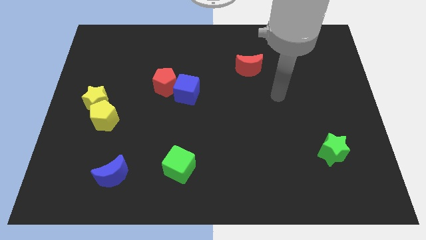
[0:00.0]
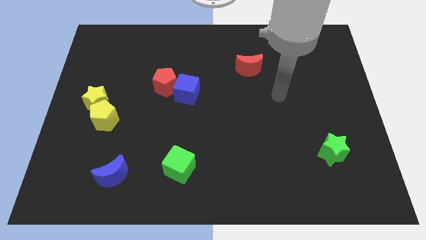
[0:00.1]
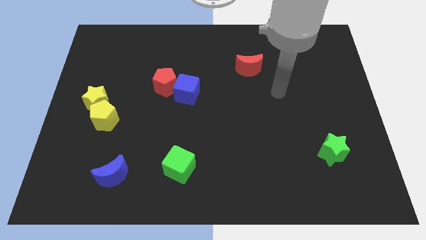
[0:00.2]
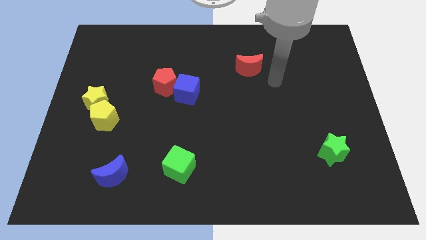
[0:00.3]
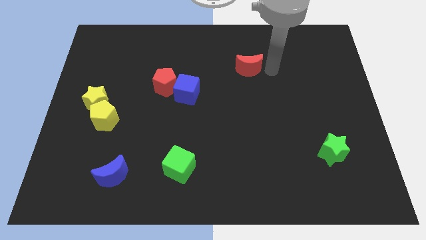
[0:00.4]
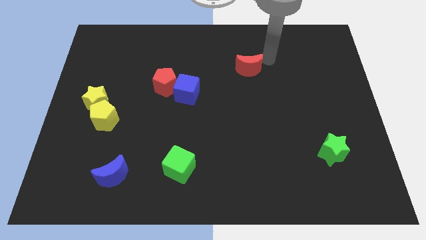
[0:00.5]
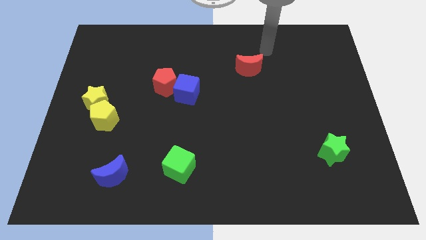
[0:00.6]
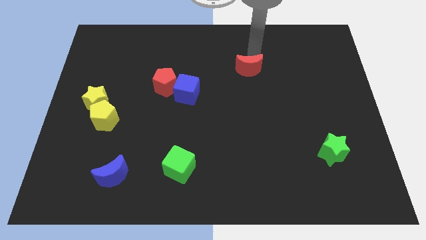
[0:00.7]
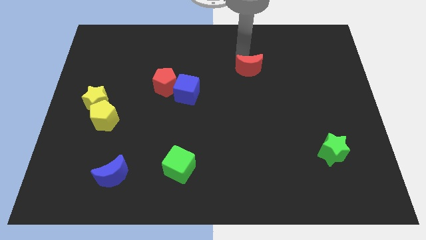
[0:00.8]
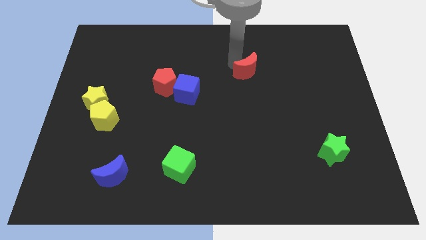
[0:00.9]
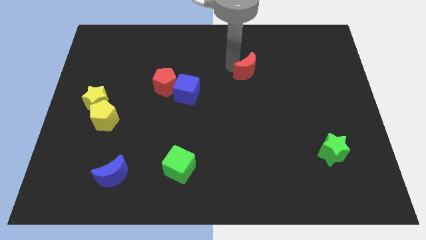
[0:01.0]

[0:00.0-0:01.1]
move your arm above the red moon

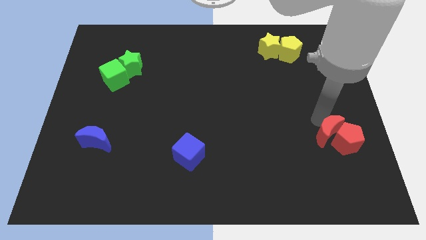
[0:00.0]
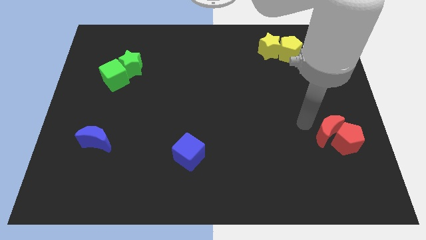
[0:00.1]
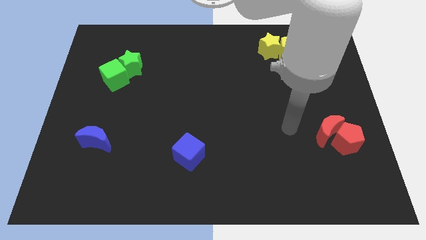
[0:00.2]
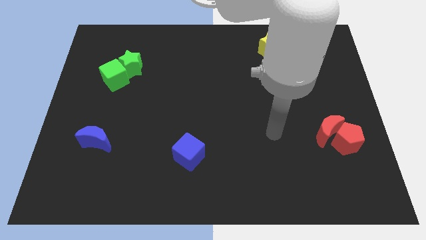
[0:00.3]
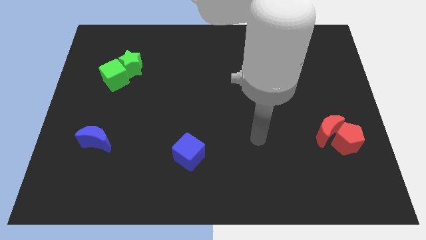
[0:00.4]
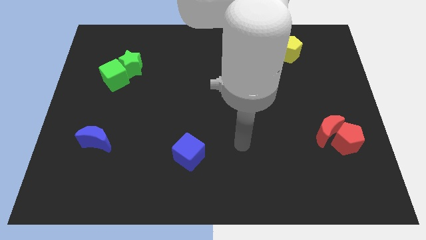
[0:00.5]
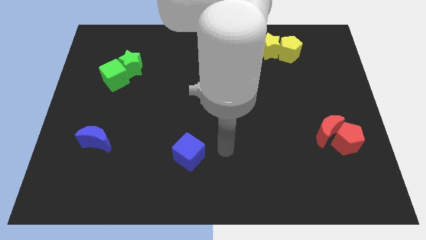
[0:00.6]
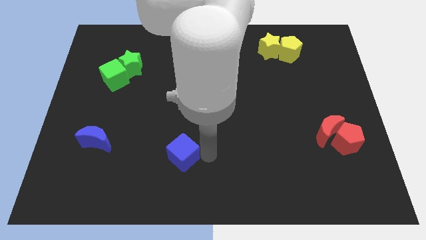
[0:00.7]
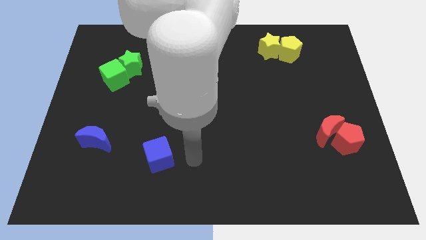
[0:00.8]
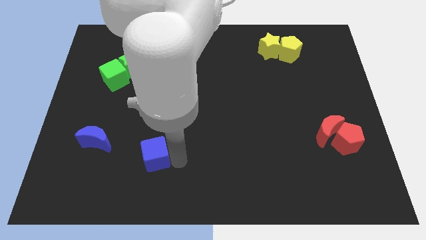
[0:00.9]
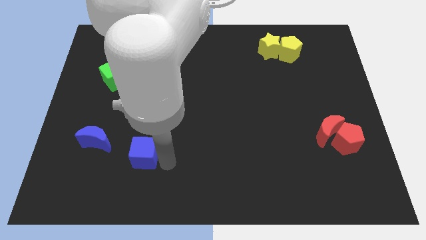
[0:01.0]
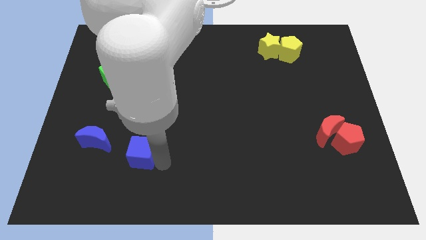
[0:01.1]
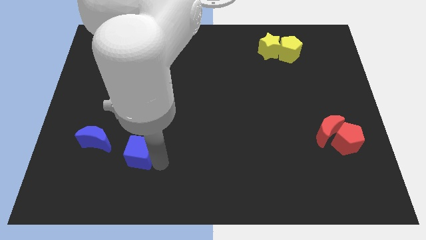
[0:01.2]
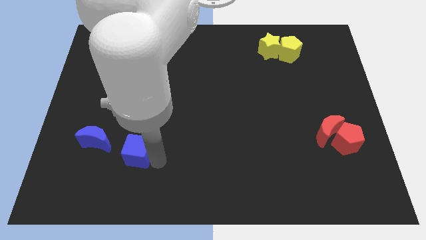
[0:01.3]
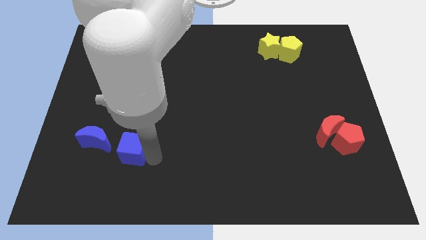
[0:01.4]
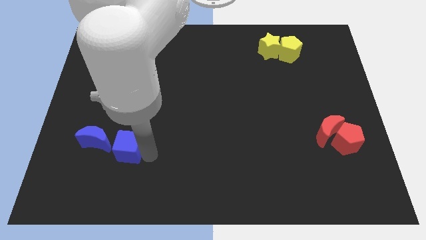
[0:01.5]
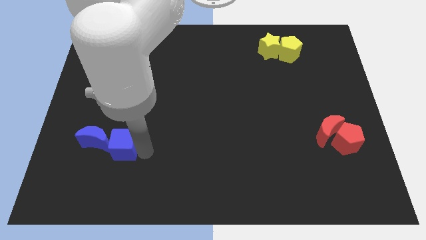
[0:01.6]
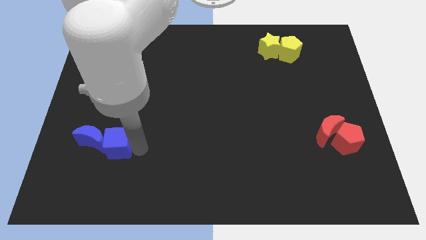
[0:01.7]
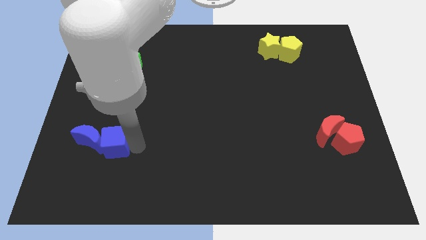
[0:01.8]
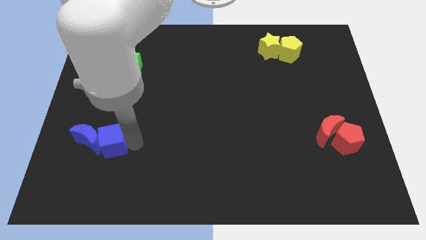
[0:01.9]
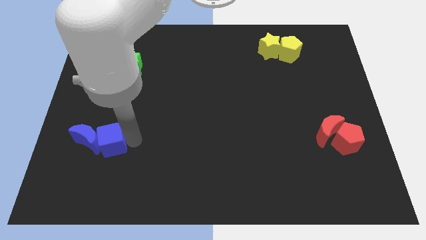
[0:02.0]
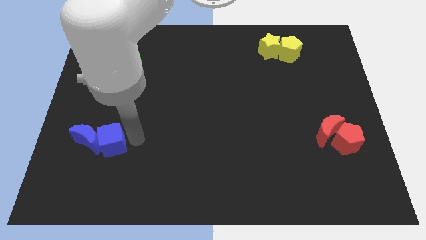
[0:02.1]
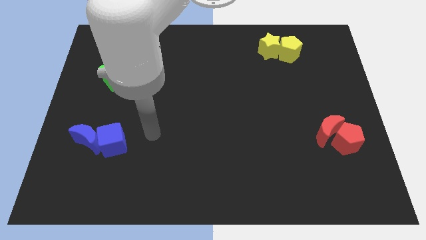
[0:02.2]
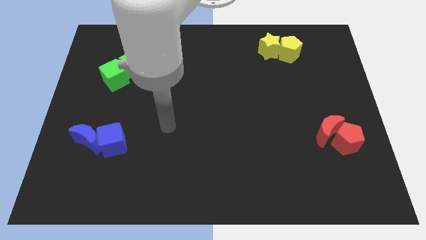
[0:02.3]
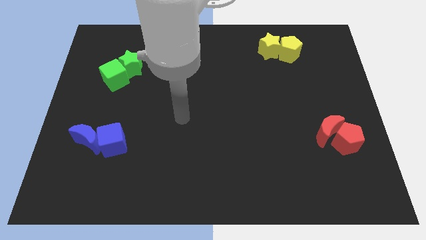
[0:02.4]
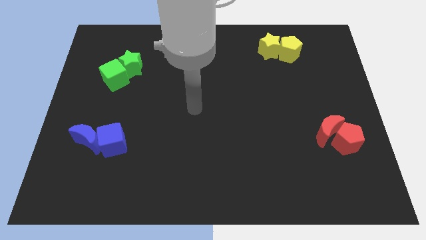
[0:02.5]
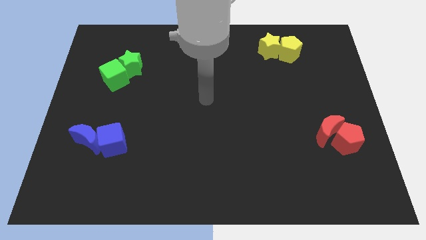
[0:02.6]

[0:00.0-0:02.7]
slide the blue cube into the right side of the blue moon

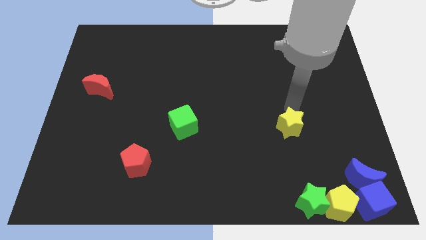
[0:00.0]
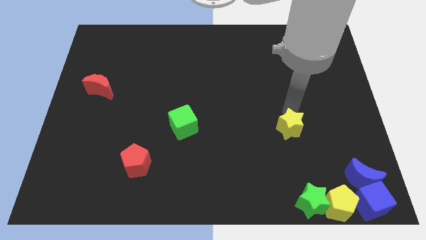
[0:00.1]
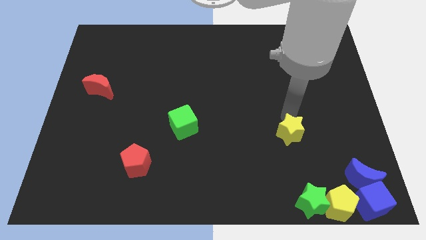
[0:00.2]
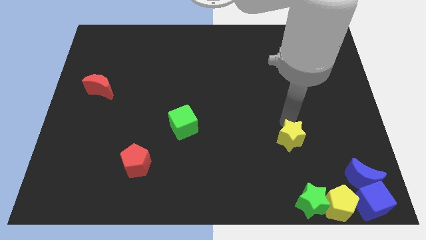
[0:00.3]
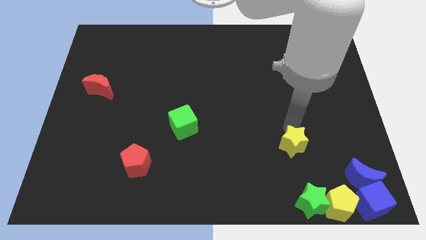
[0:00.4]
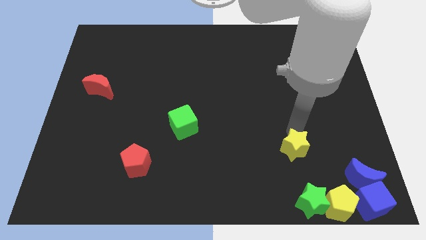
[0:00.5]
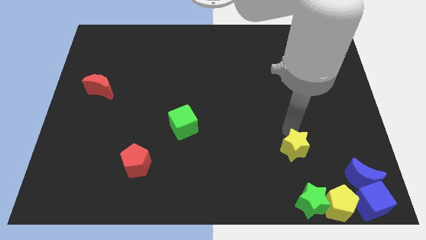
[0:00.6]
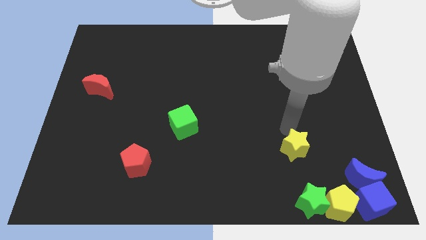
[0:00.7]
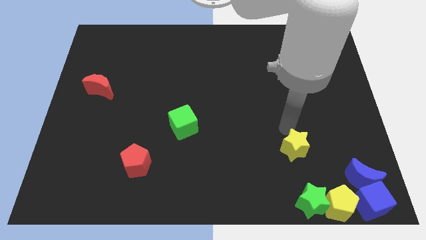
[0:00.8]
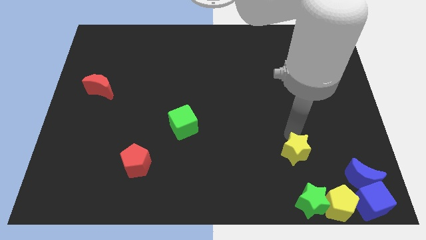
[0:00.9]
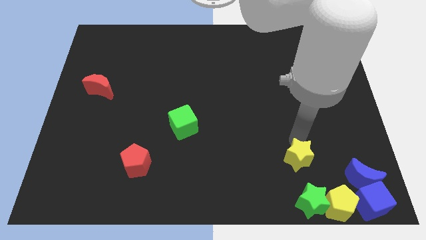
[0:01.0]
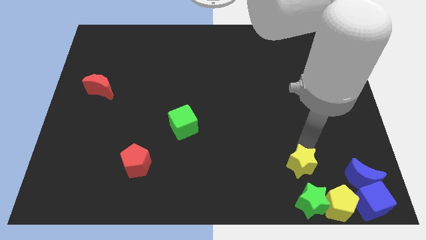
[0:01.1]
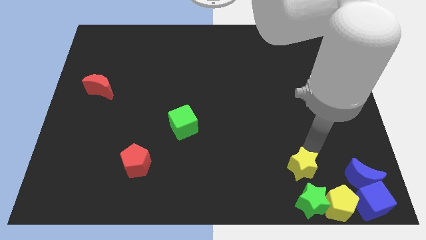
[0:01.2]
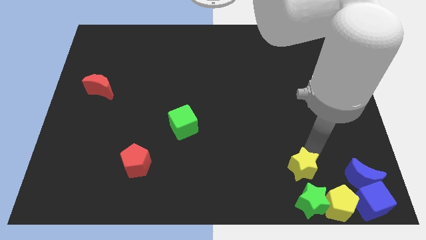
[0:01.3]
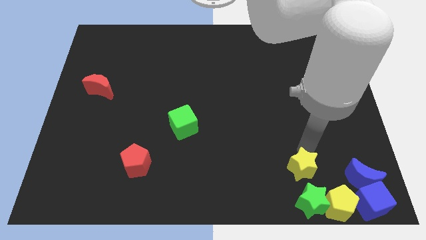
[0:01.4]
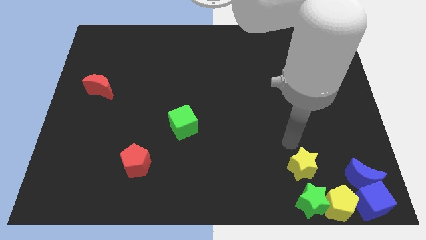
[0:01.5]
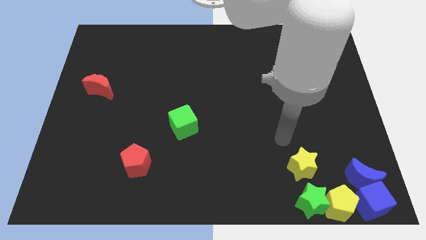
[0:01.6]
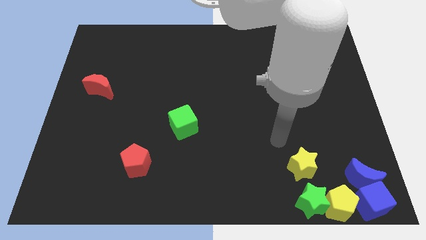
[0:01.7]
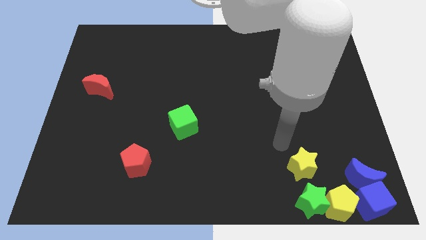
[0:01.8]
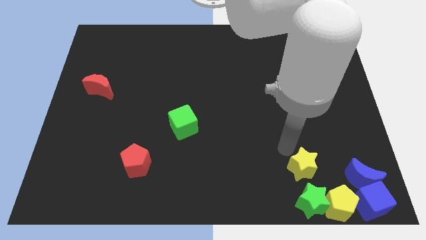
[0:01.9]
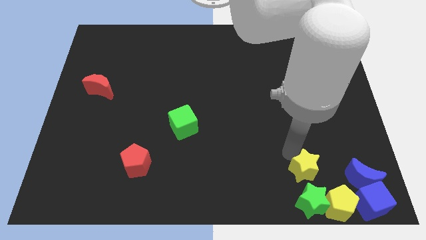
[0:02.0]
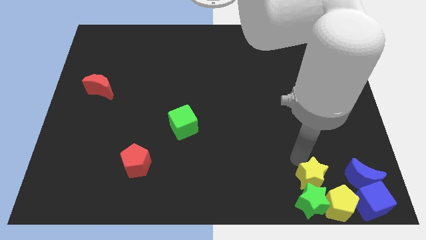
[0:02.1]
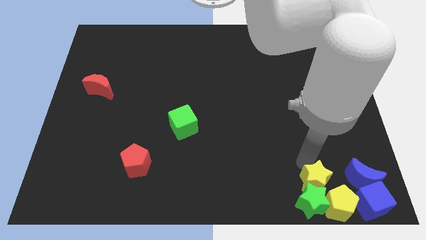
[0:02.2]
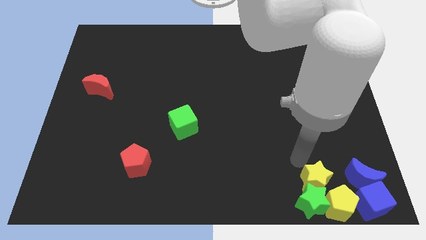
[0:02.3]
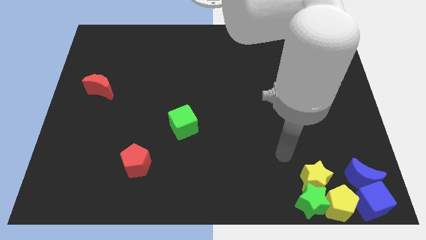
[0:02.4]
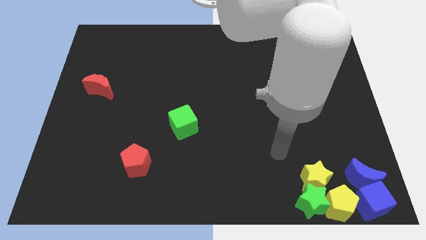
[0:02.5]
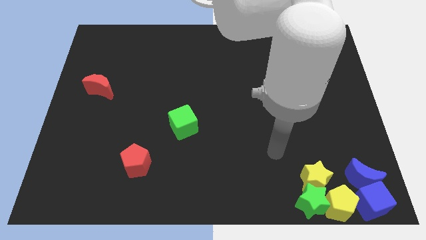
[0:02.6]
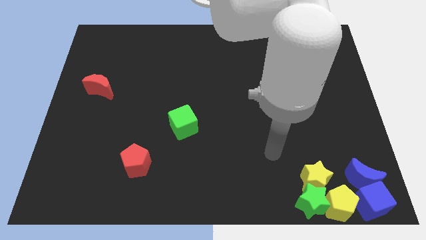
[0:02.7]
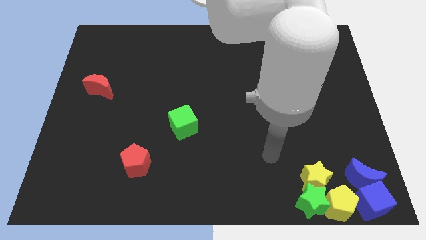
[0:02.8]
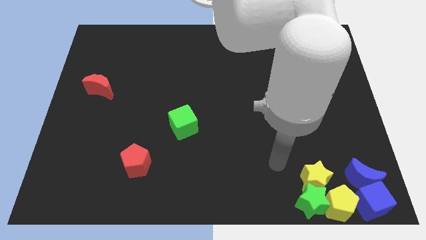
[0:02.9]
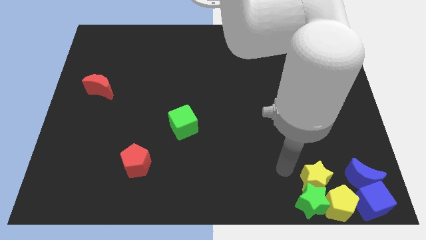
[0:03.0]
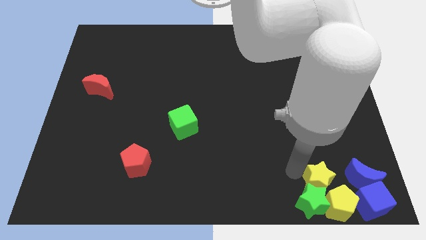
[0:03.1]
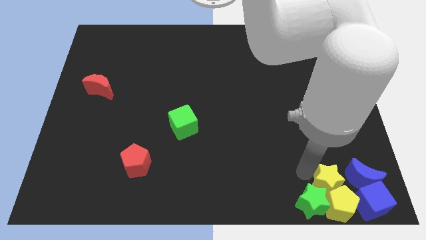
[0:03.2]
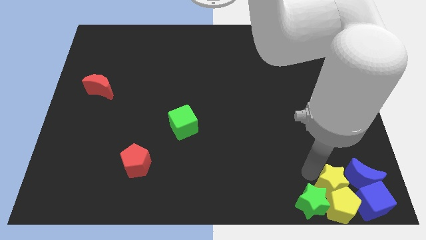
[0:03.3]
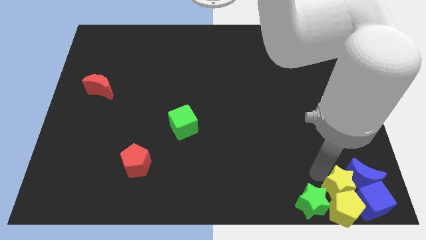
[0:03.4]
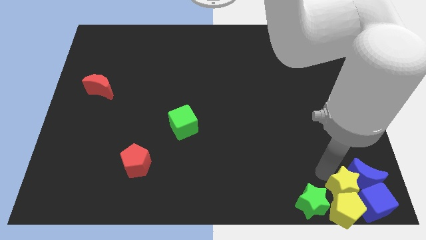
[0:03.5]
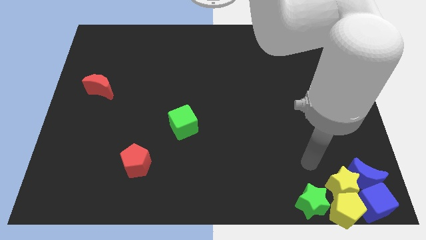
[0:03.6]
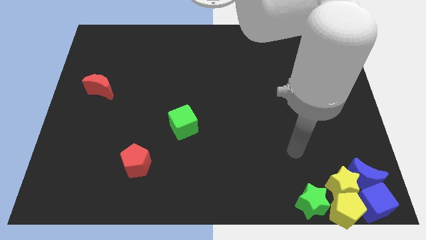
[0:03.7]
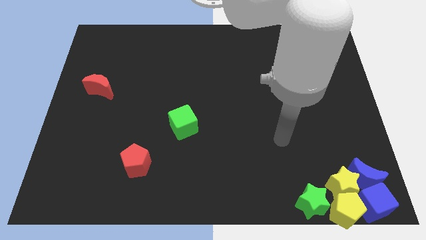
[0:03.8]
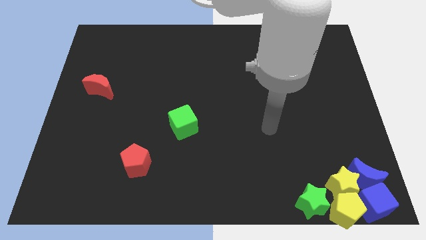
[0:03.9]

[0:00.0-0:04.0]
move the yellow star into the yellow pentagon

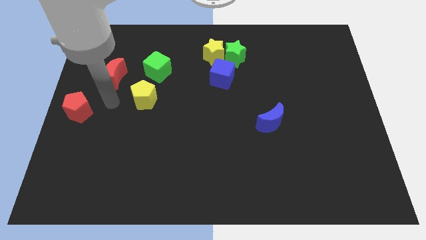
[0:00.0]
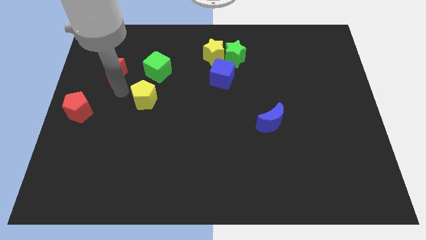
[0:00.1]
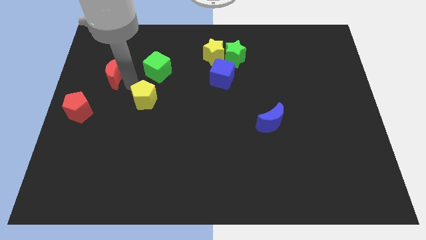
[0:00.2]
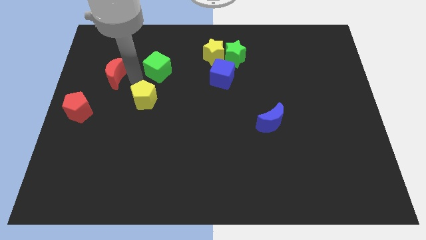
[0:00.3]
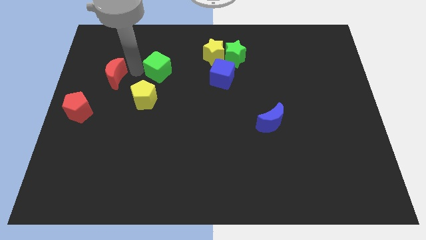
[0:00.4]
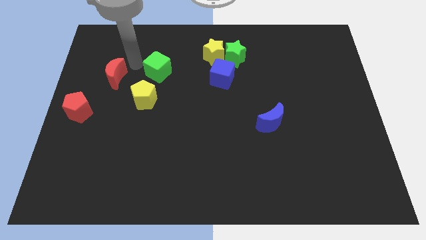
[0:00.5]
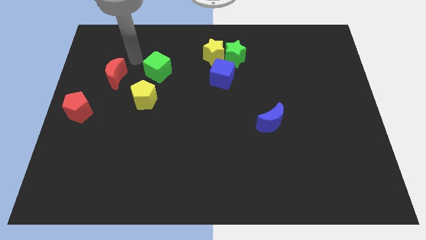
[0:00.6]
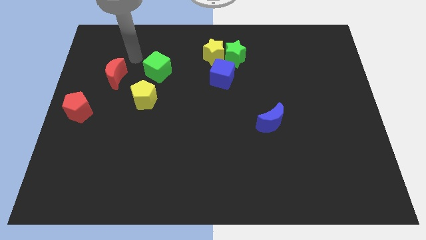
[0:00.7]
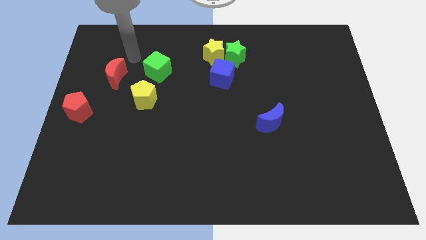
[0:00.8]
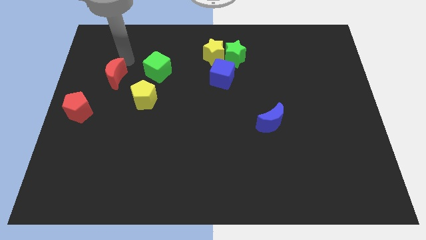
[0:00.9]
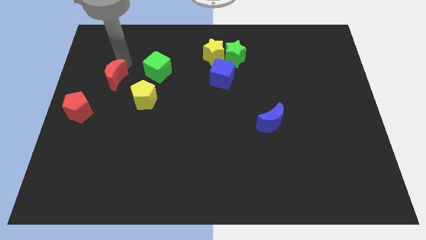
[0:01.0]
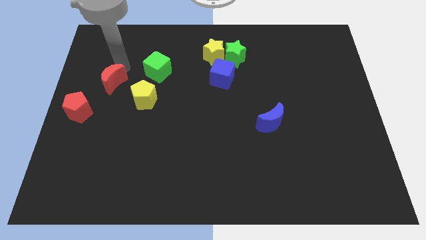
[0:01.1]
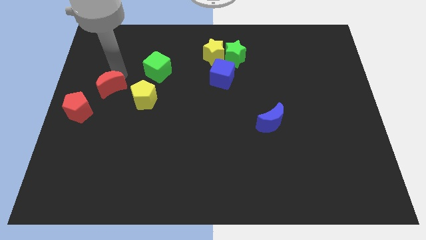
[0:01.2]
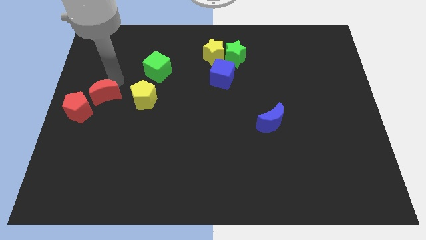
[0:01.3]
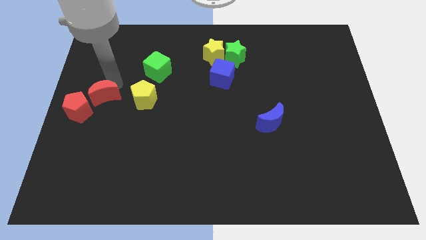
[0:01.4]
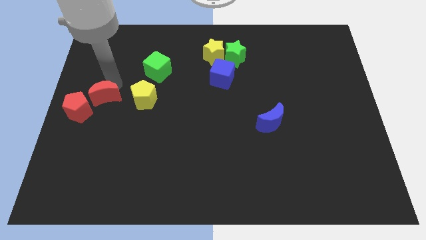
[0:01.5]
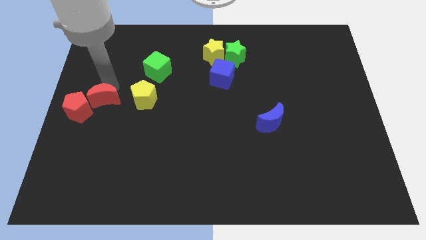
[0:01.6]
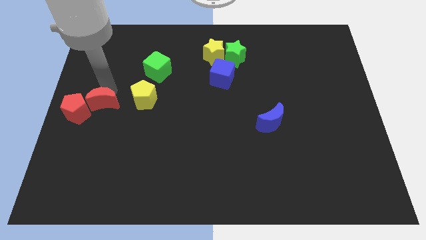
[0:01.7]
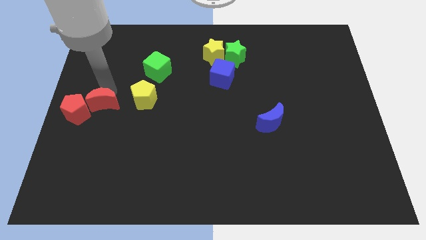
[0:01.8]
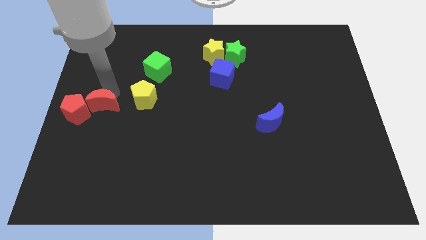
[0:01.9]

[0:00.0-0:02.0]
slide the red crescent close to the red pentagon
